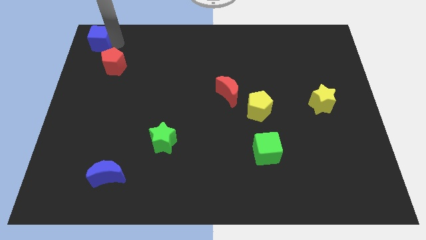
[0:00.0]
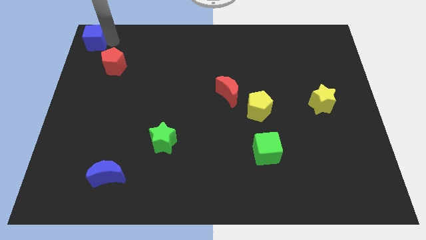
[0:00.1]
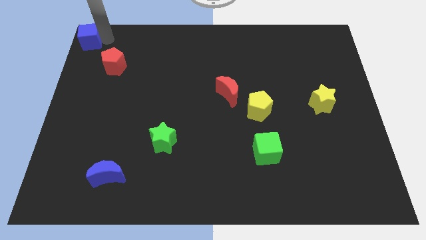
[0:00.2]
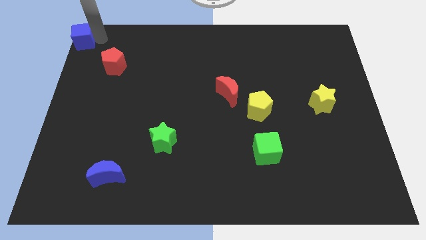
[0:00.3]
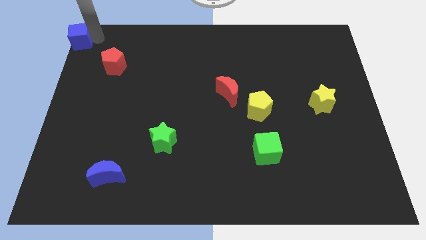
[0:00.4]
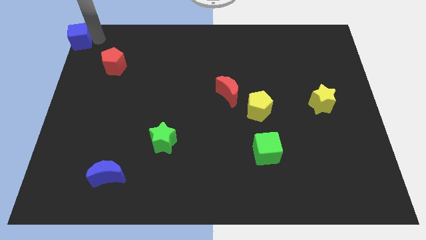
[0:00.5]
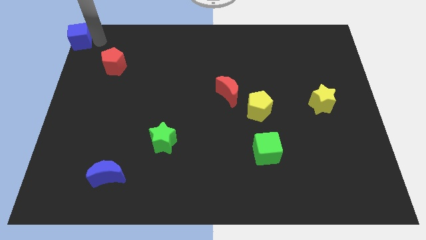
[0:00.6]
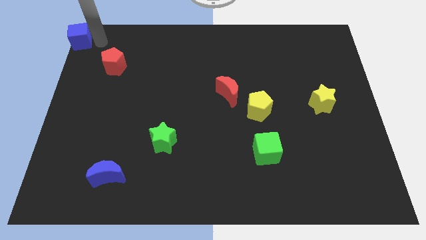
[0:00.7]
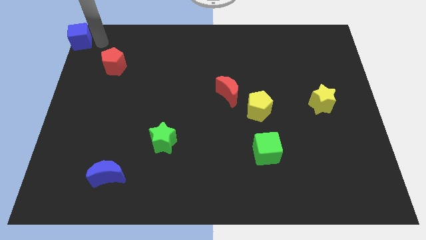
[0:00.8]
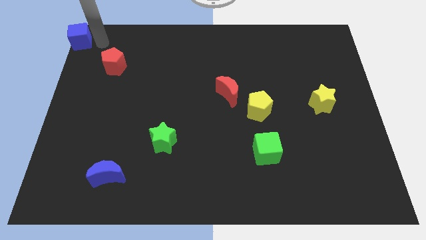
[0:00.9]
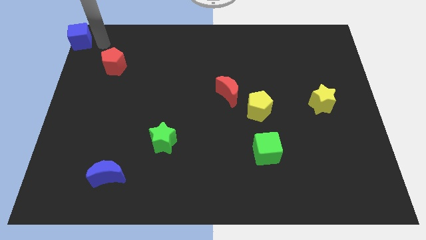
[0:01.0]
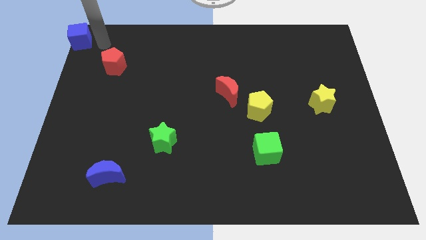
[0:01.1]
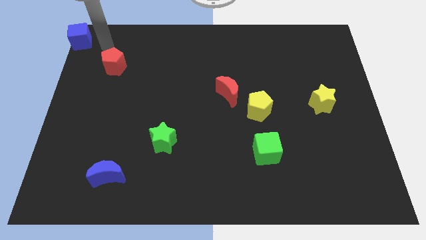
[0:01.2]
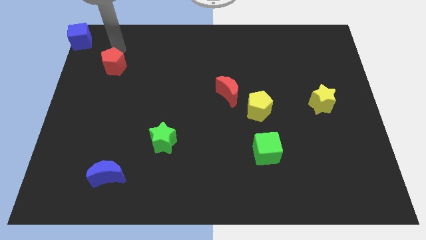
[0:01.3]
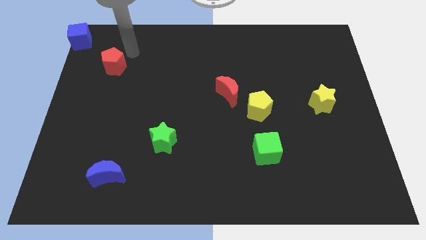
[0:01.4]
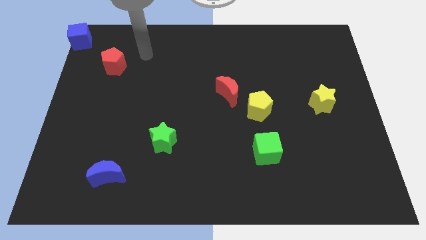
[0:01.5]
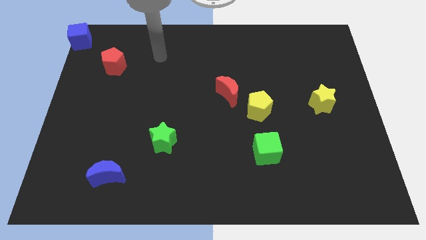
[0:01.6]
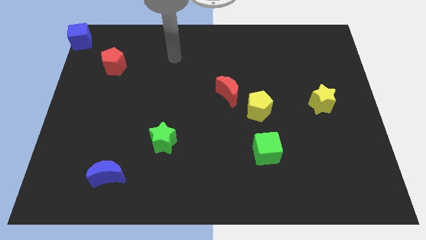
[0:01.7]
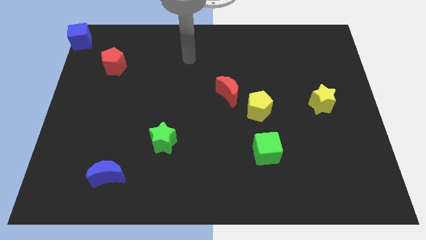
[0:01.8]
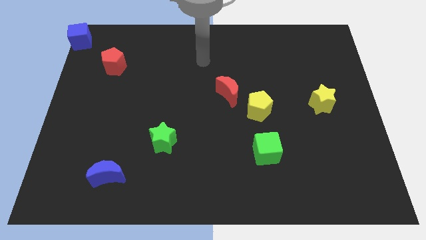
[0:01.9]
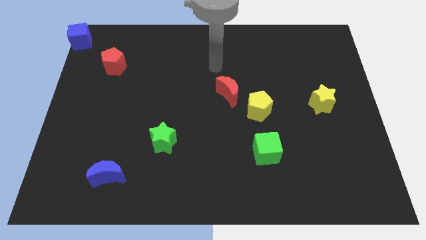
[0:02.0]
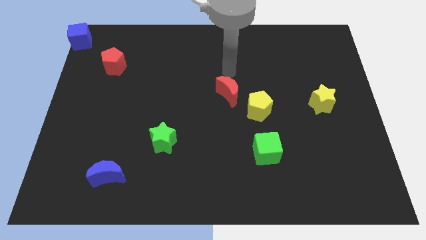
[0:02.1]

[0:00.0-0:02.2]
point your hand above the red moon

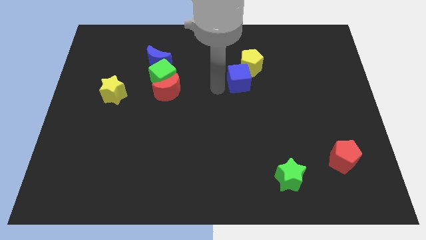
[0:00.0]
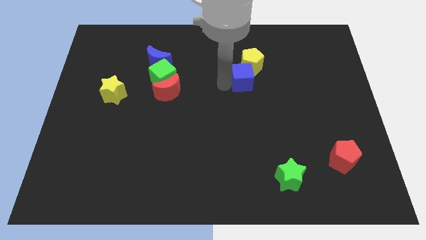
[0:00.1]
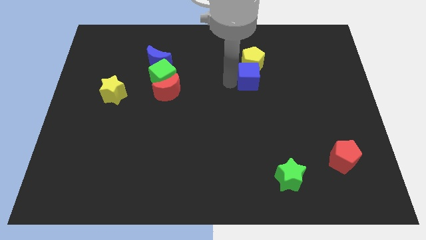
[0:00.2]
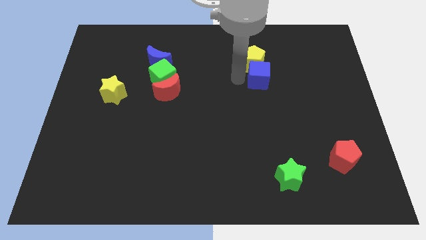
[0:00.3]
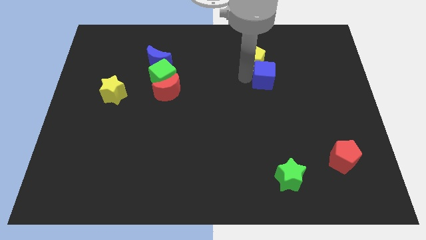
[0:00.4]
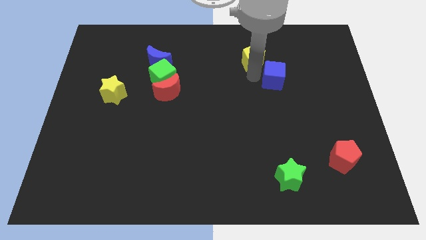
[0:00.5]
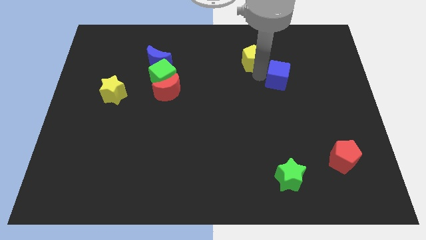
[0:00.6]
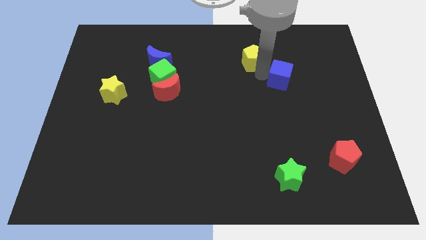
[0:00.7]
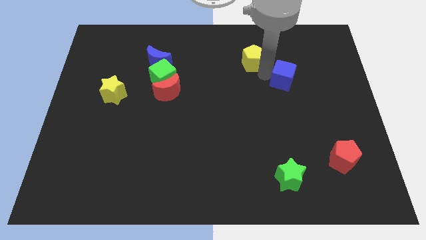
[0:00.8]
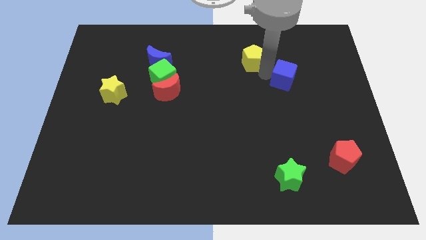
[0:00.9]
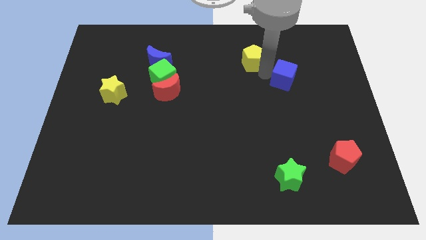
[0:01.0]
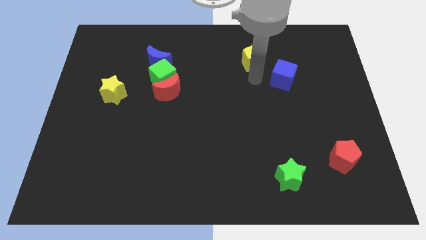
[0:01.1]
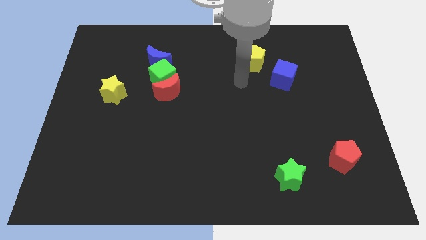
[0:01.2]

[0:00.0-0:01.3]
put the blue cube at the bottom right of the yellow pentagon

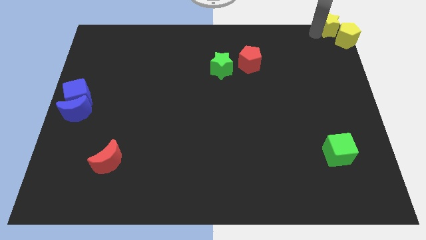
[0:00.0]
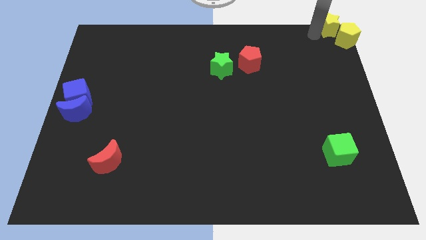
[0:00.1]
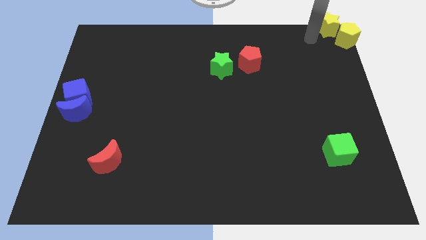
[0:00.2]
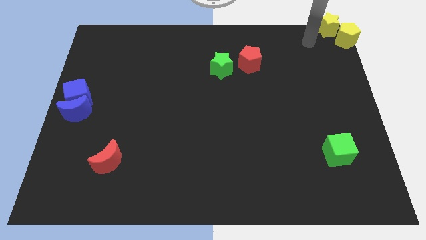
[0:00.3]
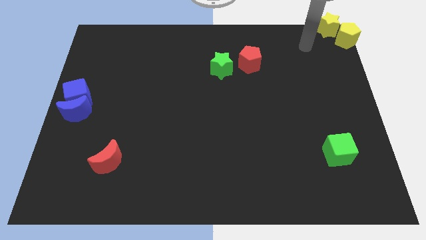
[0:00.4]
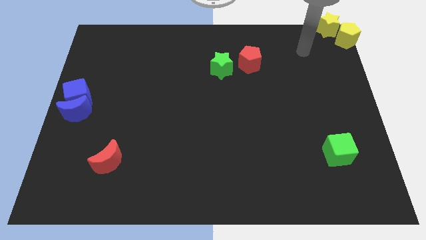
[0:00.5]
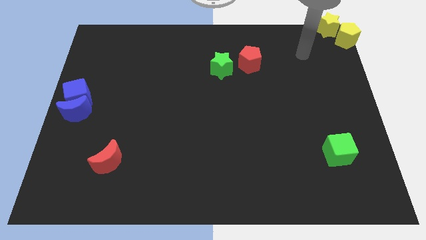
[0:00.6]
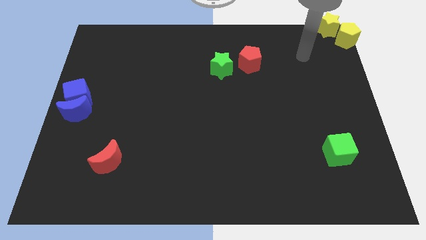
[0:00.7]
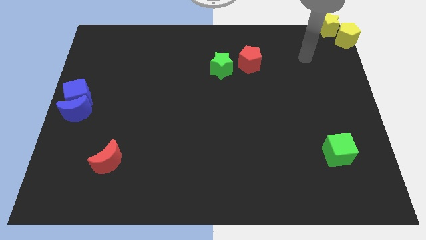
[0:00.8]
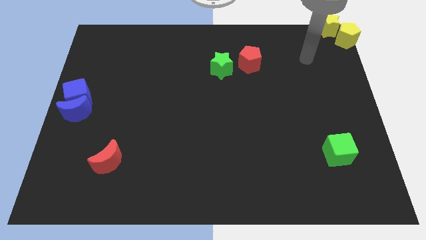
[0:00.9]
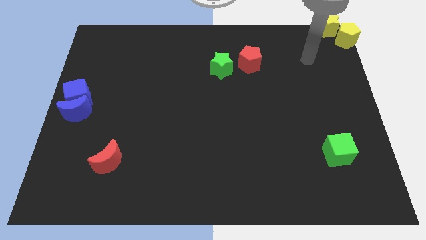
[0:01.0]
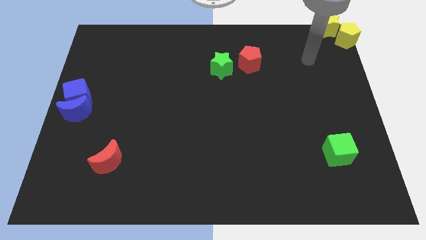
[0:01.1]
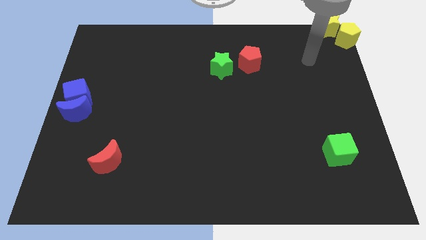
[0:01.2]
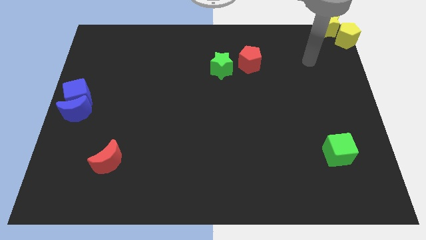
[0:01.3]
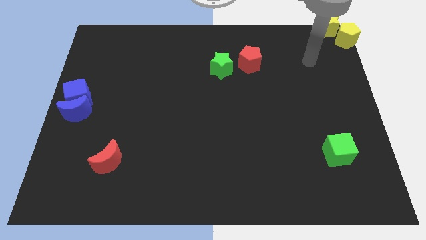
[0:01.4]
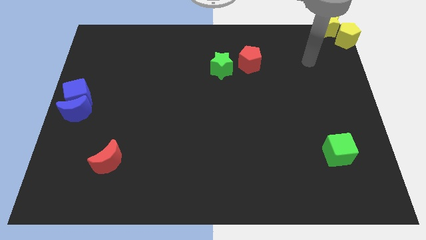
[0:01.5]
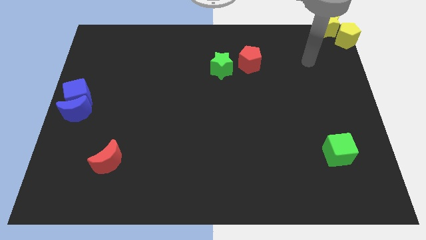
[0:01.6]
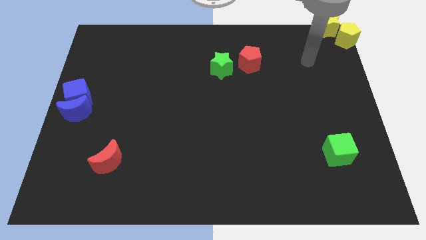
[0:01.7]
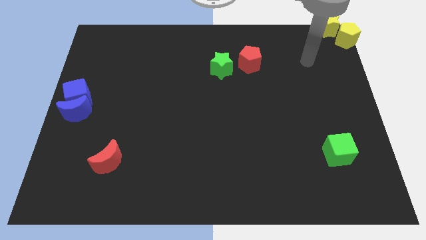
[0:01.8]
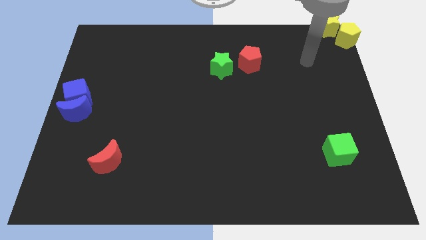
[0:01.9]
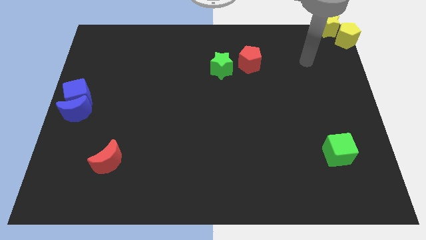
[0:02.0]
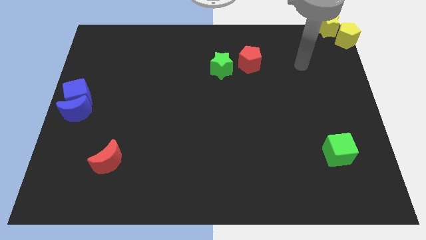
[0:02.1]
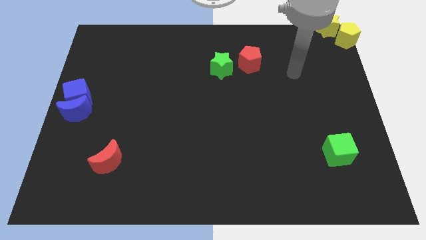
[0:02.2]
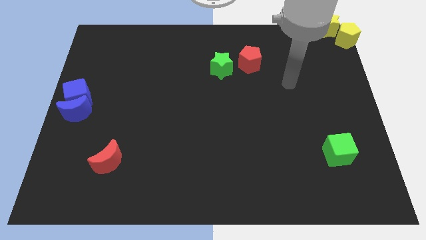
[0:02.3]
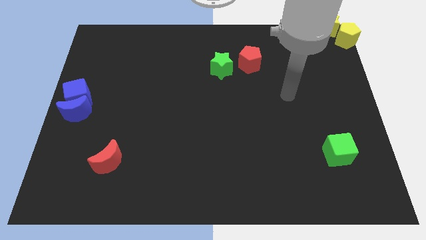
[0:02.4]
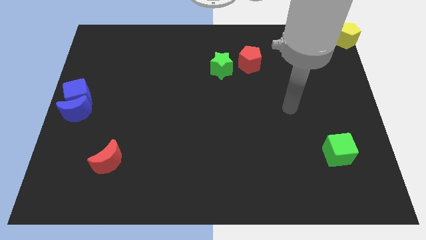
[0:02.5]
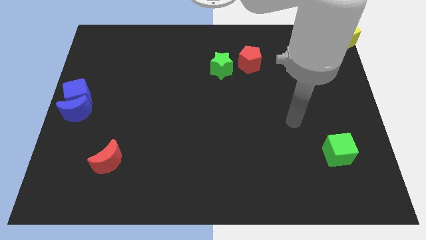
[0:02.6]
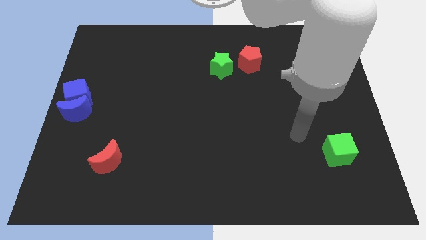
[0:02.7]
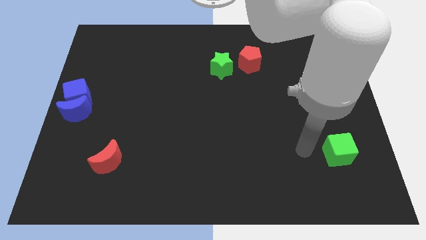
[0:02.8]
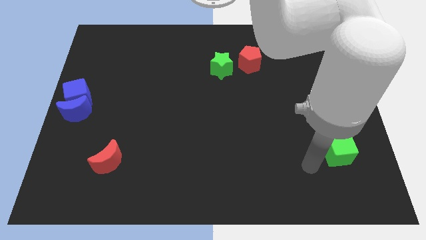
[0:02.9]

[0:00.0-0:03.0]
move your arm left to the green cube

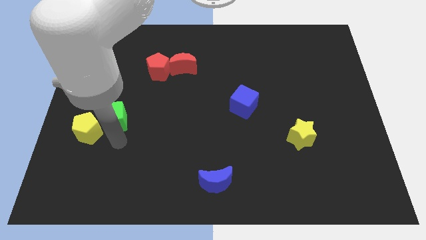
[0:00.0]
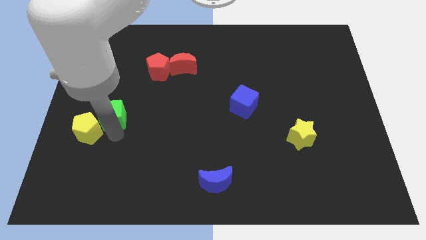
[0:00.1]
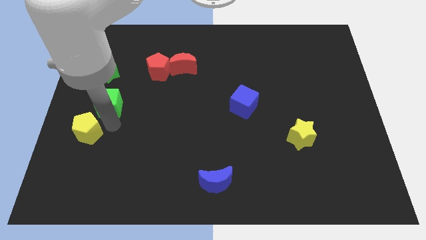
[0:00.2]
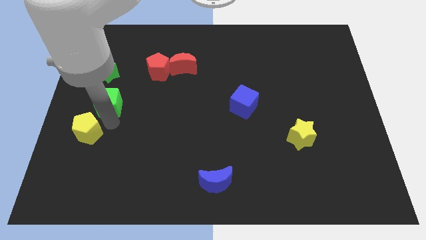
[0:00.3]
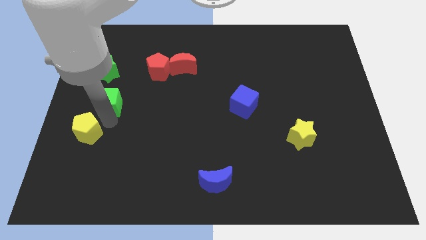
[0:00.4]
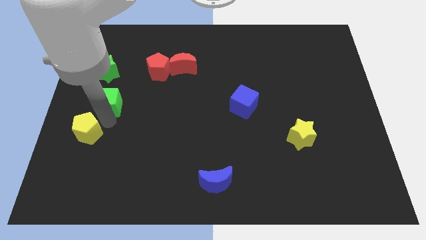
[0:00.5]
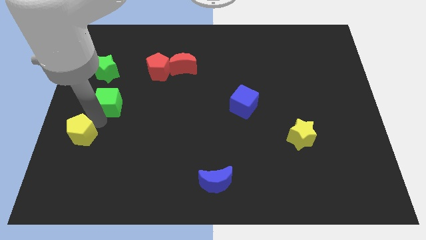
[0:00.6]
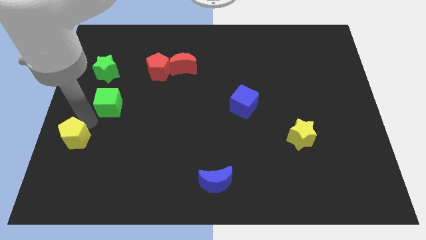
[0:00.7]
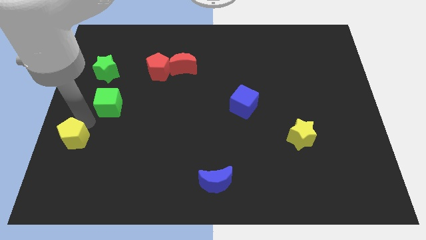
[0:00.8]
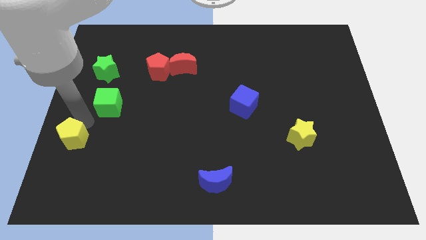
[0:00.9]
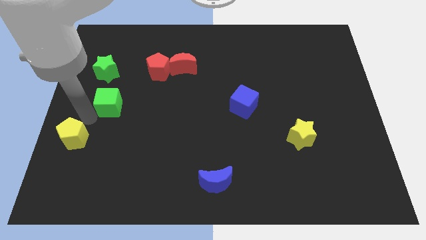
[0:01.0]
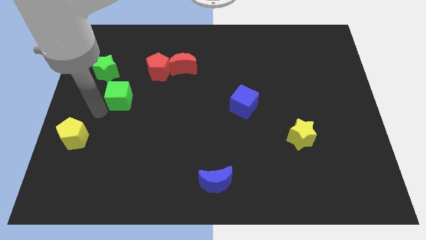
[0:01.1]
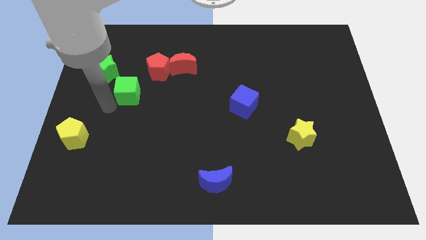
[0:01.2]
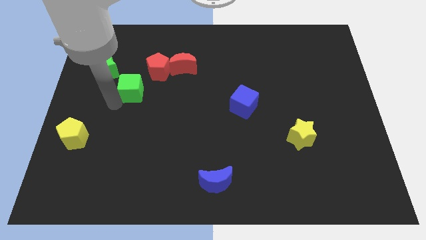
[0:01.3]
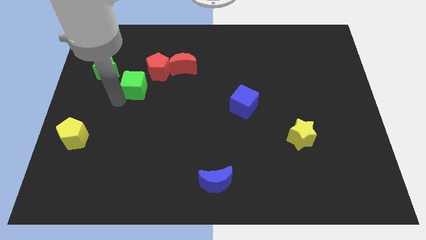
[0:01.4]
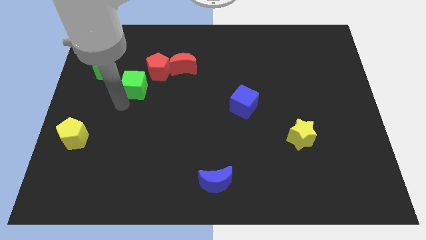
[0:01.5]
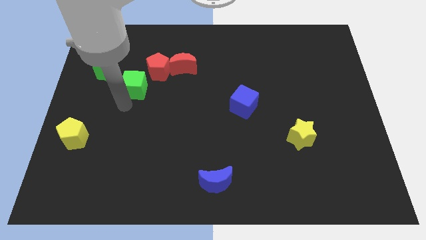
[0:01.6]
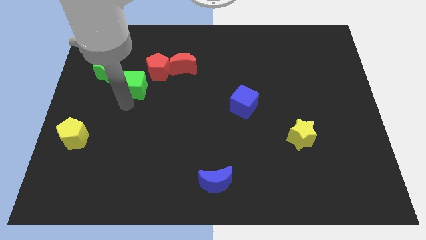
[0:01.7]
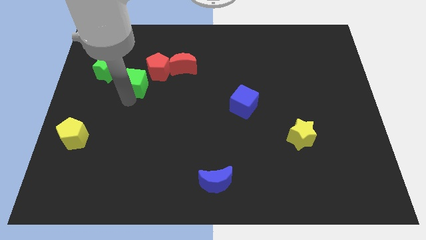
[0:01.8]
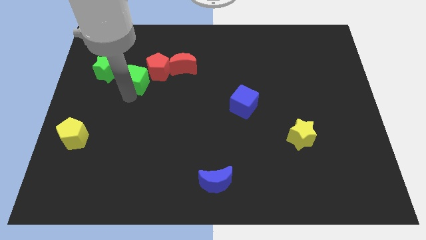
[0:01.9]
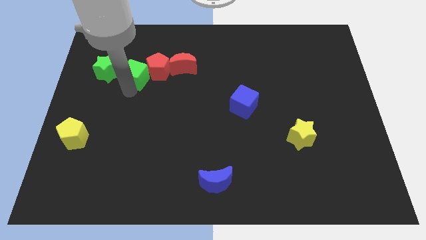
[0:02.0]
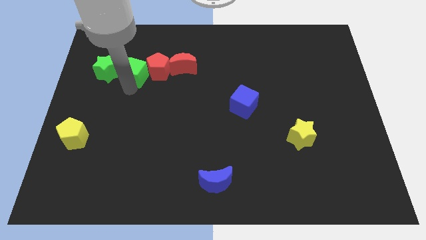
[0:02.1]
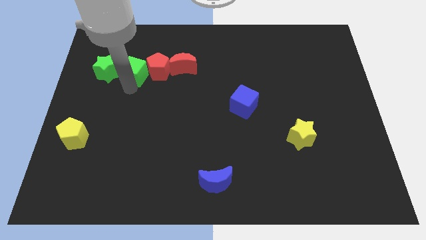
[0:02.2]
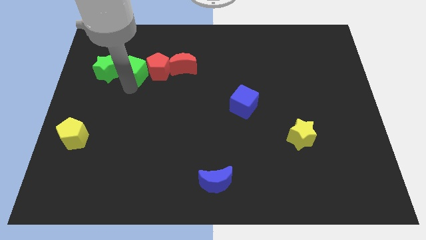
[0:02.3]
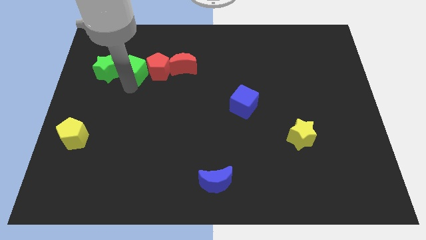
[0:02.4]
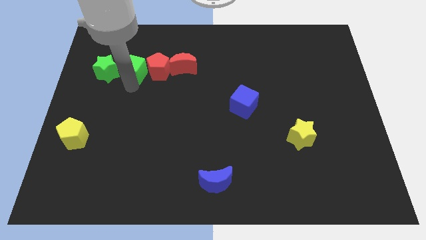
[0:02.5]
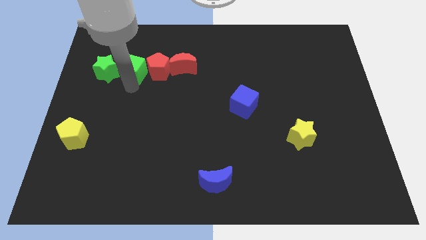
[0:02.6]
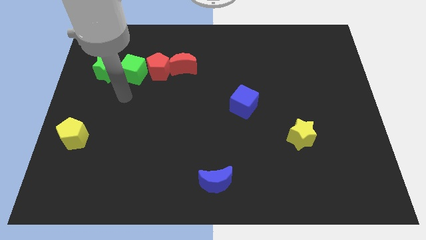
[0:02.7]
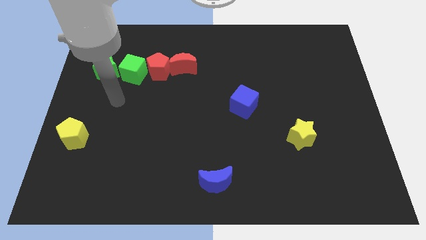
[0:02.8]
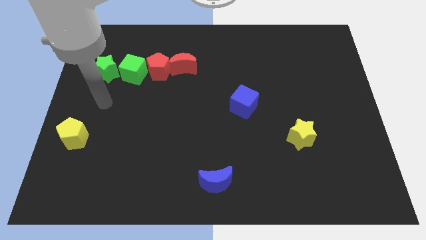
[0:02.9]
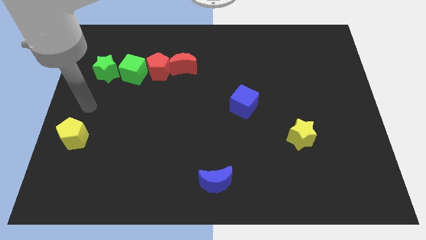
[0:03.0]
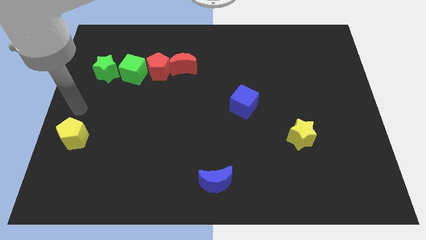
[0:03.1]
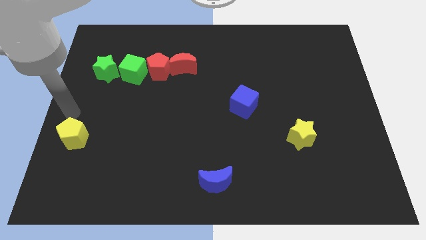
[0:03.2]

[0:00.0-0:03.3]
push the green cube in between the red pentagon and green star
